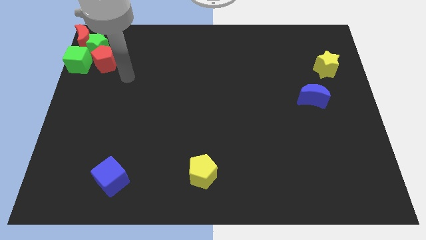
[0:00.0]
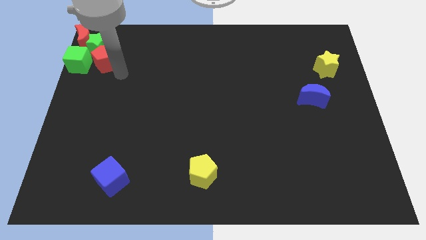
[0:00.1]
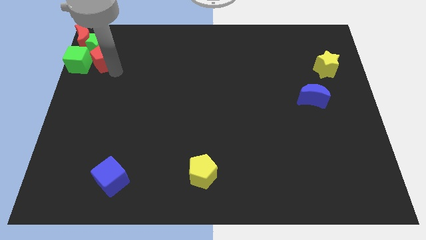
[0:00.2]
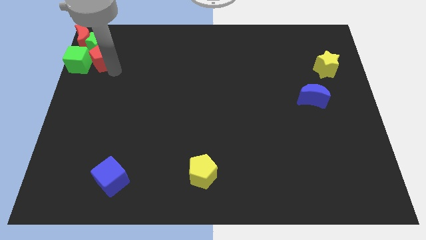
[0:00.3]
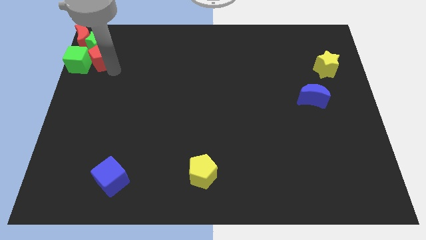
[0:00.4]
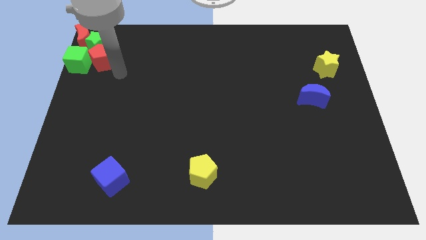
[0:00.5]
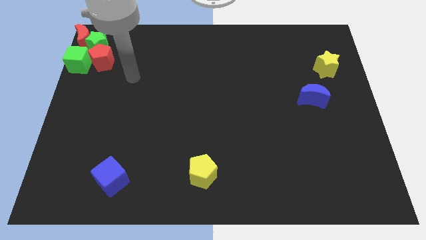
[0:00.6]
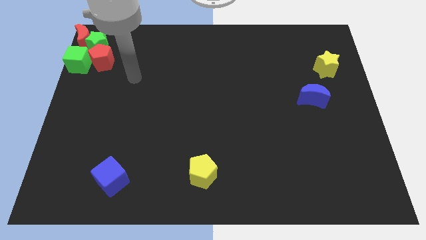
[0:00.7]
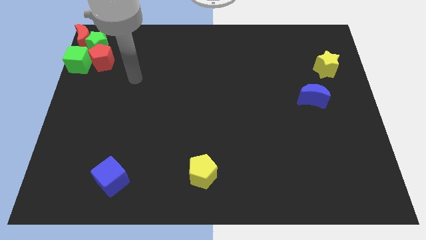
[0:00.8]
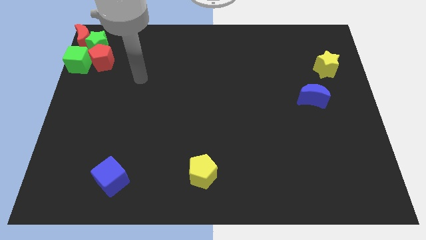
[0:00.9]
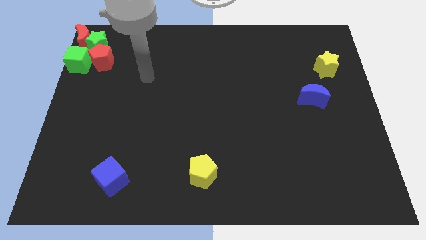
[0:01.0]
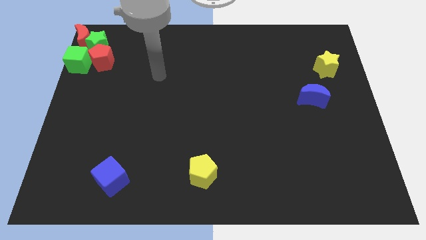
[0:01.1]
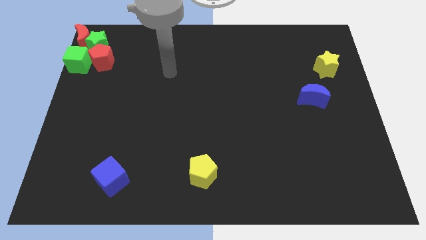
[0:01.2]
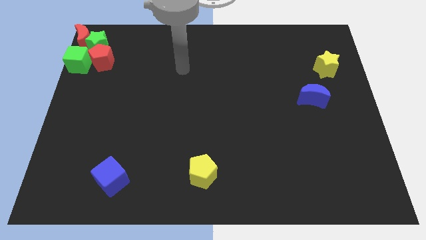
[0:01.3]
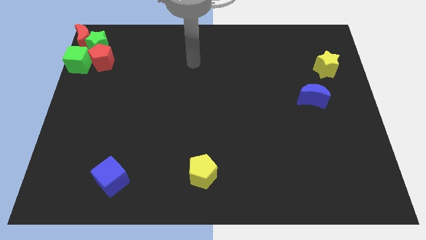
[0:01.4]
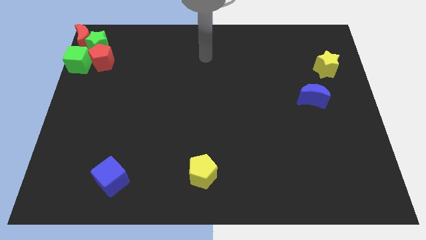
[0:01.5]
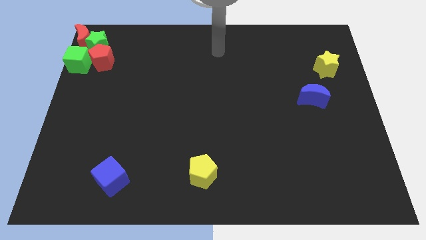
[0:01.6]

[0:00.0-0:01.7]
move the arm parallel to the top center

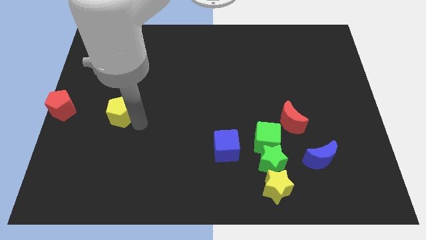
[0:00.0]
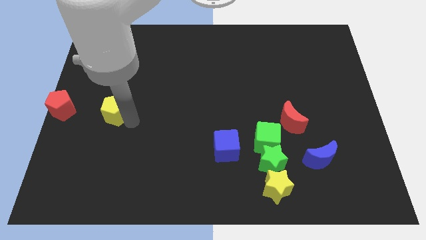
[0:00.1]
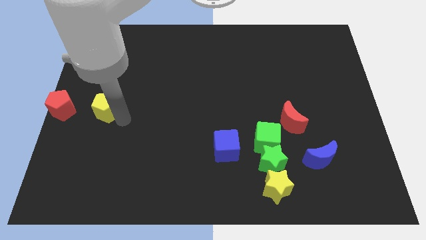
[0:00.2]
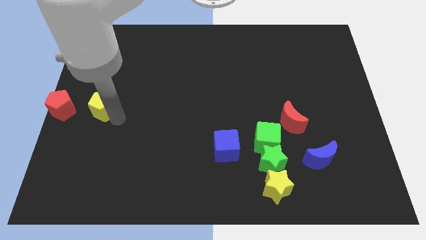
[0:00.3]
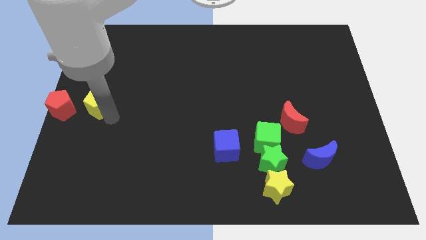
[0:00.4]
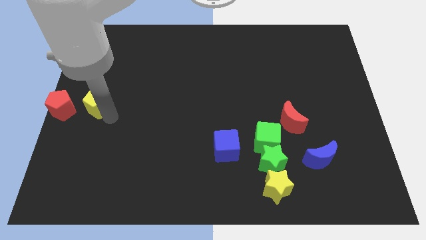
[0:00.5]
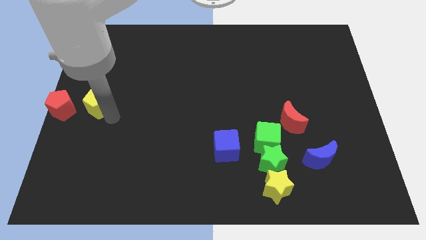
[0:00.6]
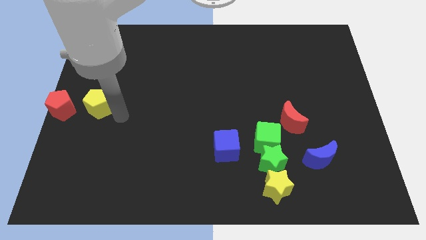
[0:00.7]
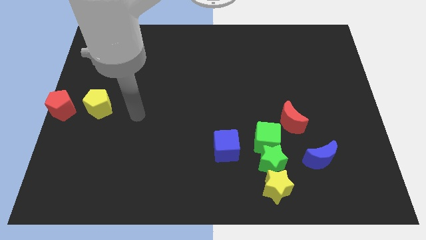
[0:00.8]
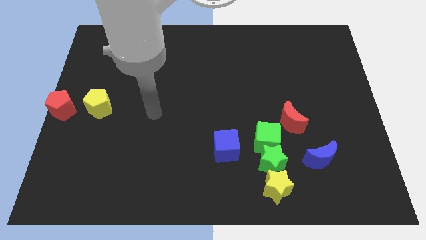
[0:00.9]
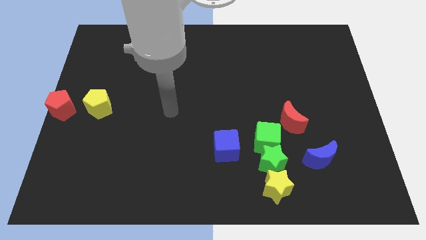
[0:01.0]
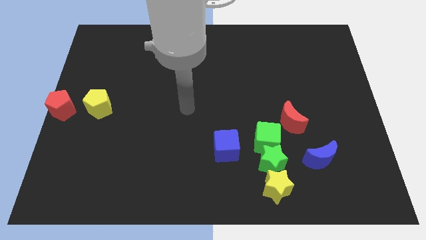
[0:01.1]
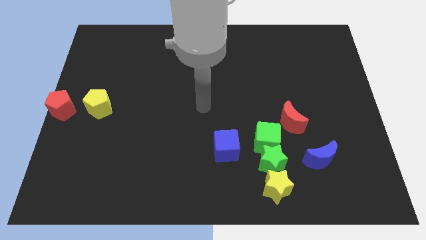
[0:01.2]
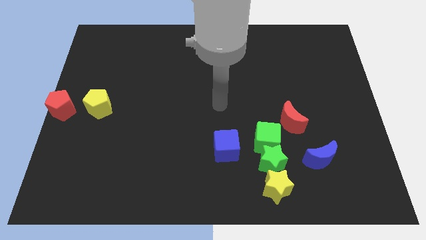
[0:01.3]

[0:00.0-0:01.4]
slide the yellow pentagon right to the red pentagon

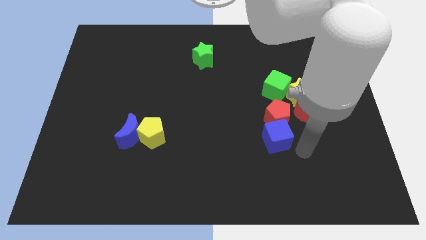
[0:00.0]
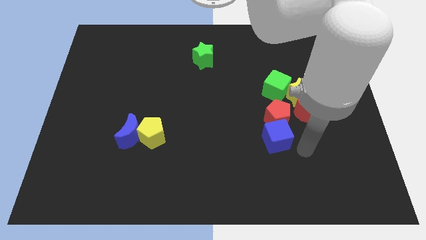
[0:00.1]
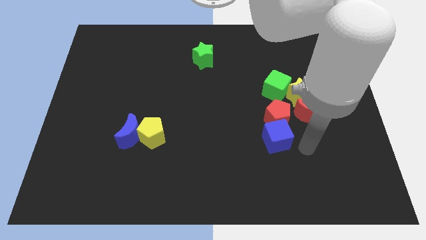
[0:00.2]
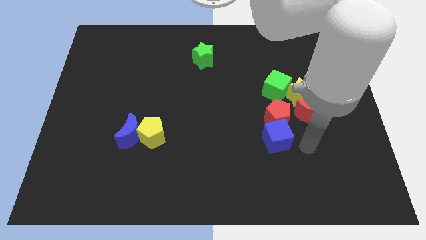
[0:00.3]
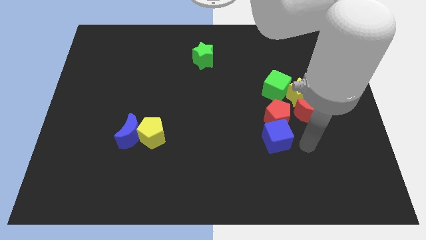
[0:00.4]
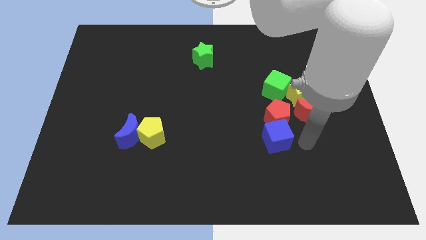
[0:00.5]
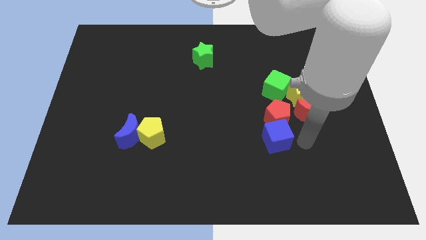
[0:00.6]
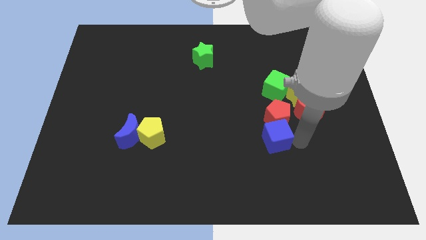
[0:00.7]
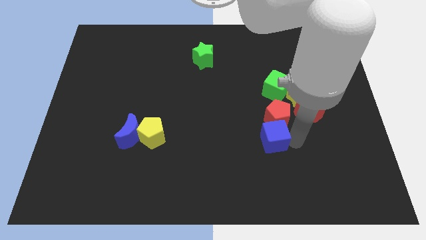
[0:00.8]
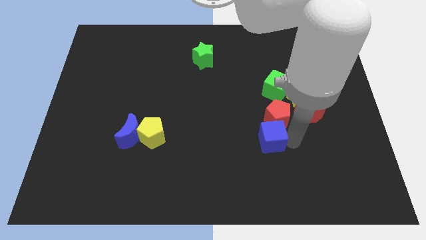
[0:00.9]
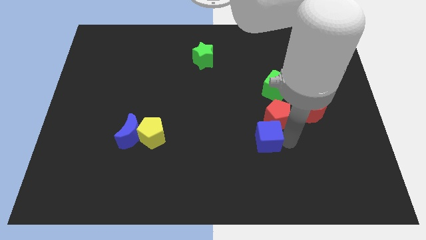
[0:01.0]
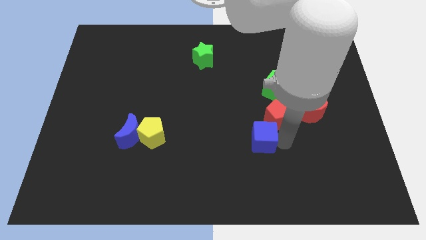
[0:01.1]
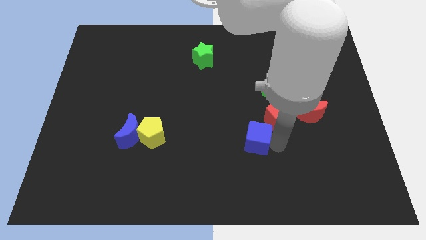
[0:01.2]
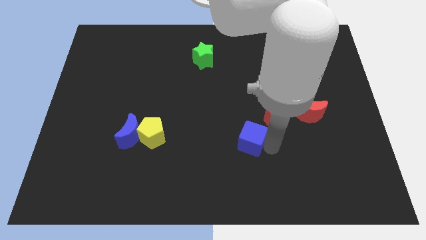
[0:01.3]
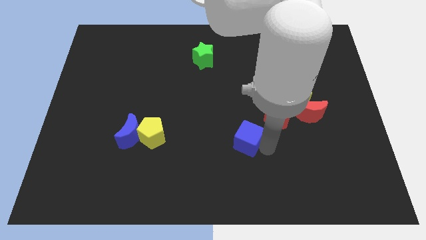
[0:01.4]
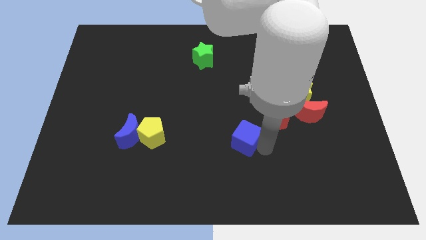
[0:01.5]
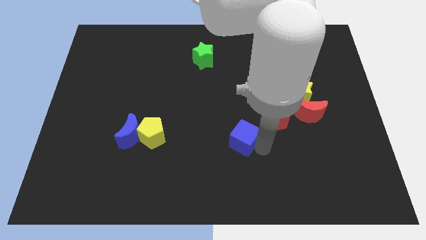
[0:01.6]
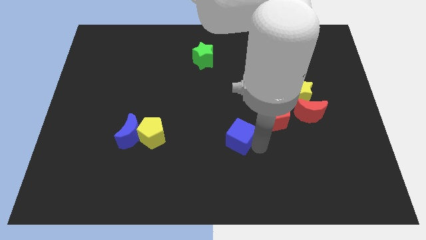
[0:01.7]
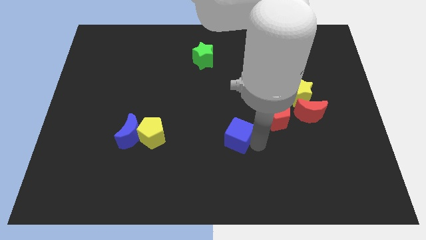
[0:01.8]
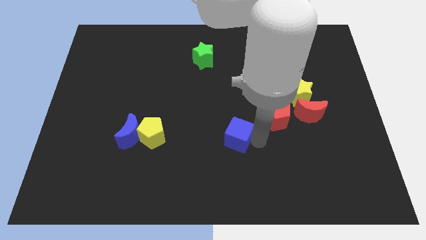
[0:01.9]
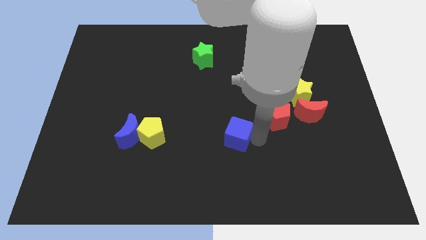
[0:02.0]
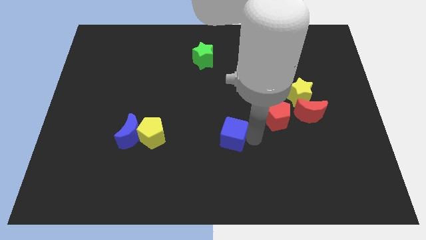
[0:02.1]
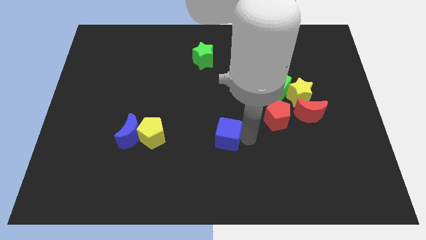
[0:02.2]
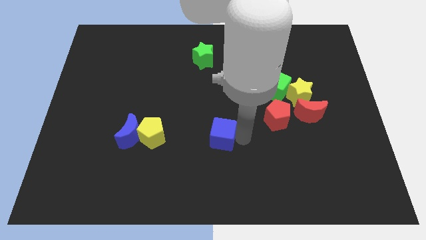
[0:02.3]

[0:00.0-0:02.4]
place the blue cube horizontally right to the yellow pentagon

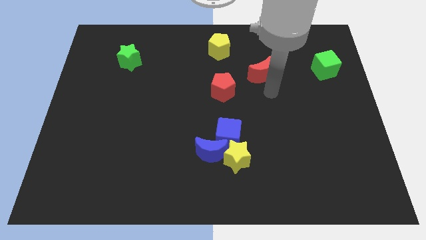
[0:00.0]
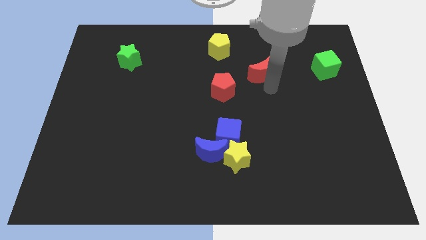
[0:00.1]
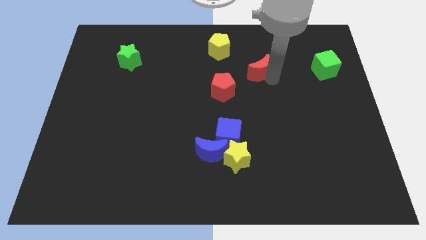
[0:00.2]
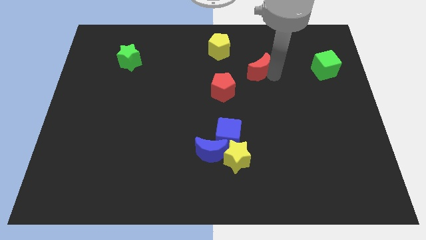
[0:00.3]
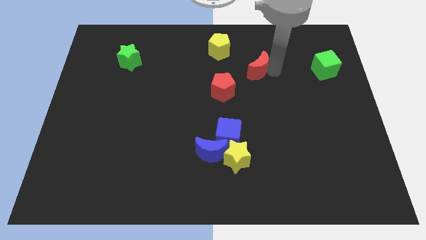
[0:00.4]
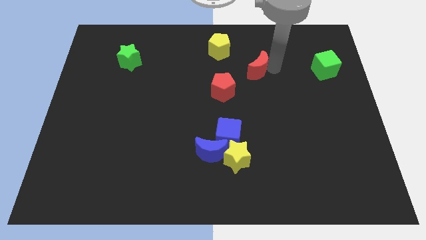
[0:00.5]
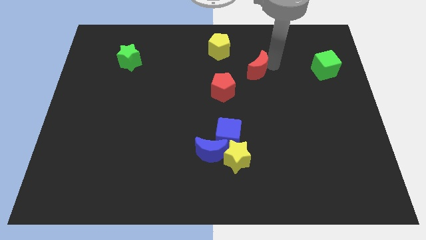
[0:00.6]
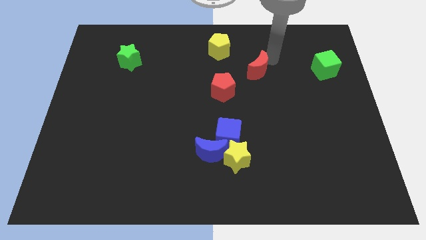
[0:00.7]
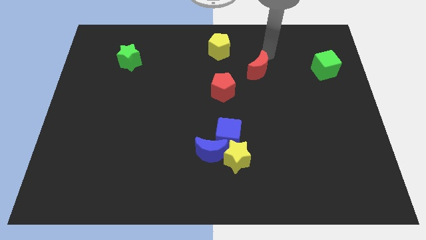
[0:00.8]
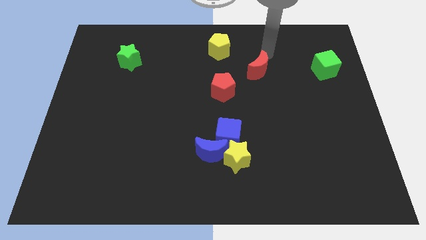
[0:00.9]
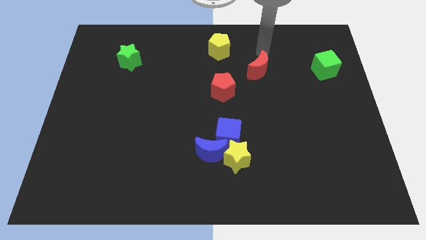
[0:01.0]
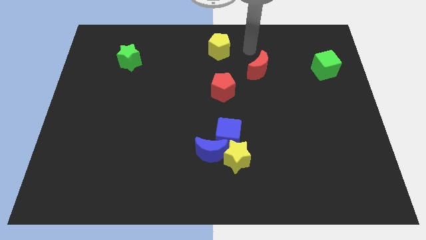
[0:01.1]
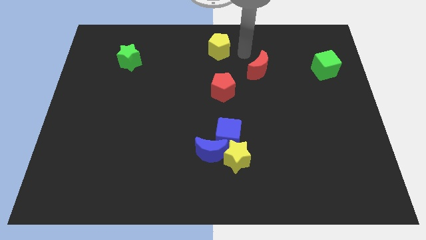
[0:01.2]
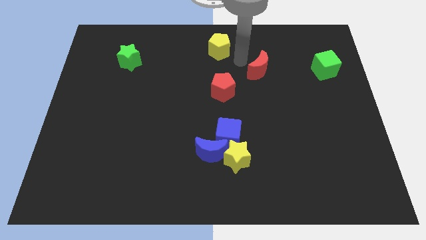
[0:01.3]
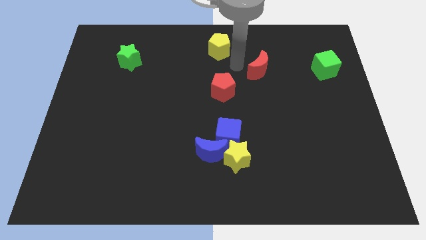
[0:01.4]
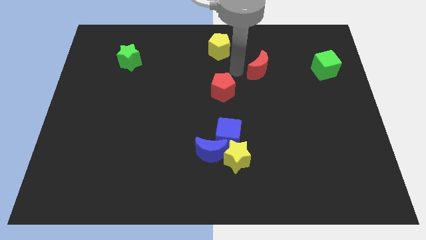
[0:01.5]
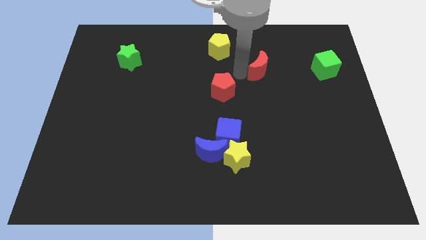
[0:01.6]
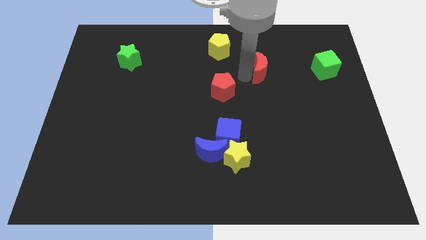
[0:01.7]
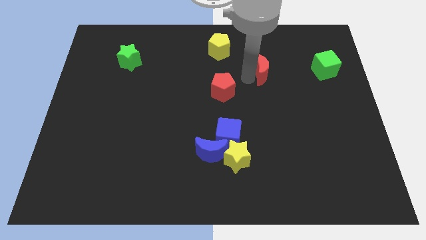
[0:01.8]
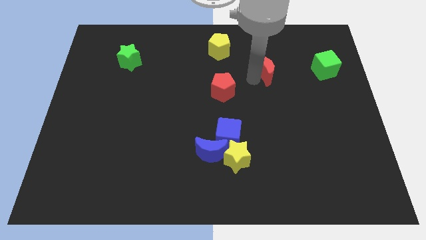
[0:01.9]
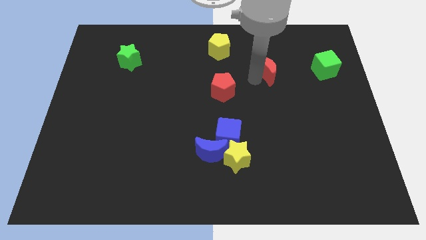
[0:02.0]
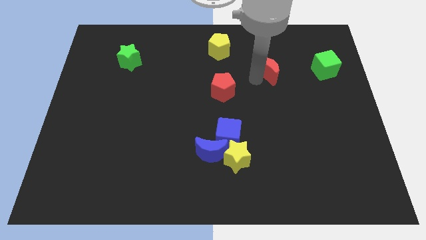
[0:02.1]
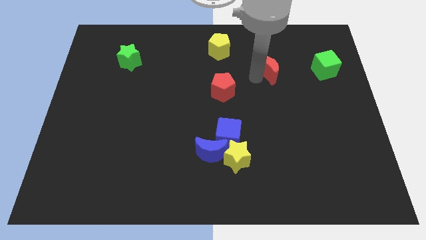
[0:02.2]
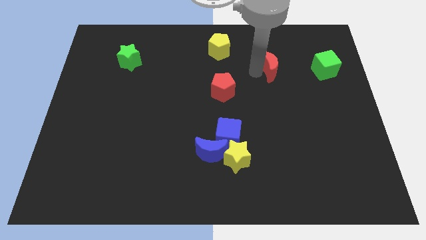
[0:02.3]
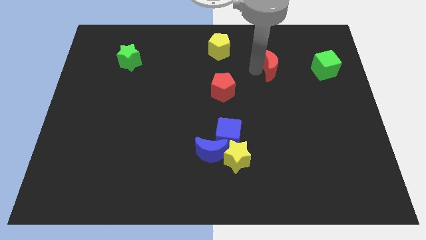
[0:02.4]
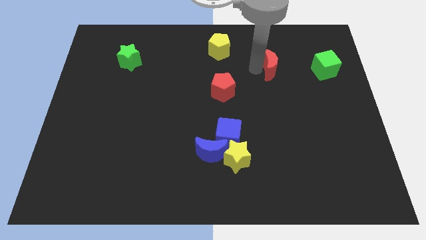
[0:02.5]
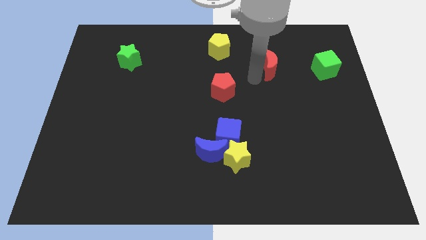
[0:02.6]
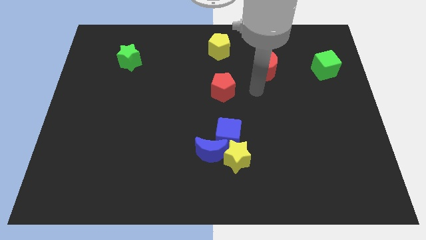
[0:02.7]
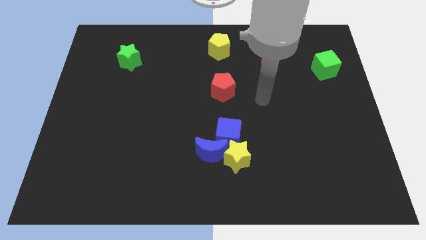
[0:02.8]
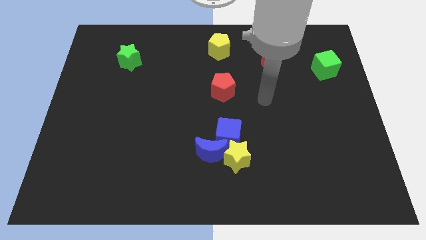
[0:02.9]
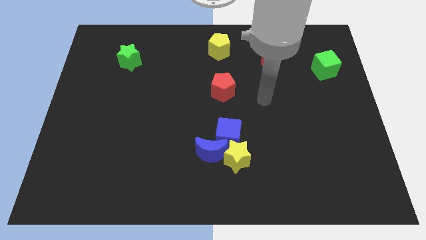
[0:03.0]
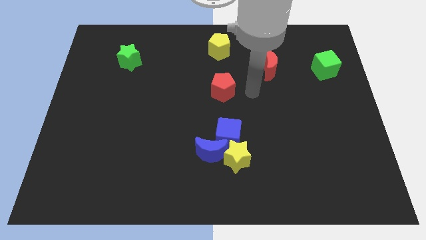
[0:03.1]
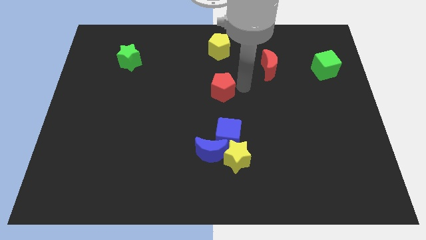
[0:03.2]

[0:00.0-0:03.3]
slightly move the red moon to the right

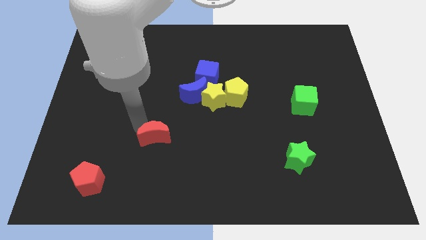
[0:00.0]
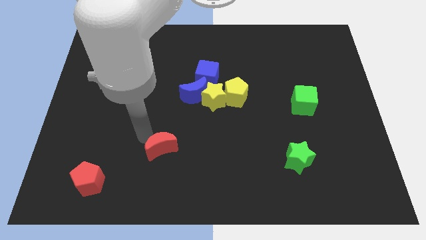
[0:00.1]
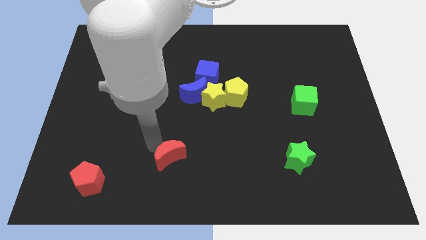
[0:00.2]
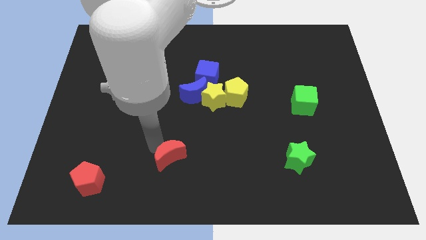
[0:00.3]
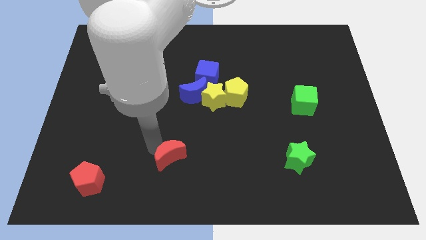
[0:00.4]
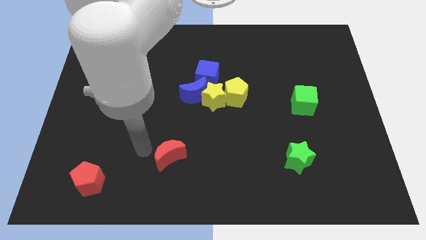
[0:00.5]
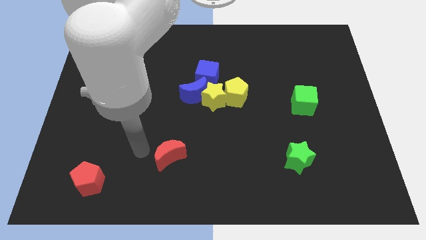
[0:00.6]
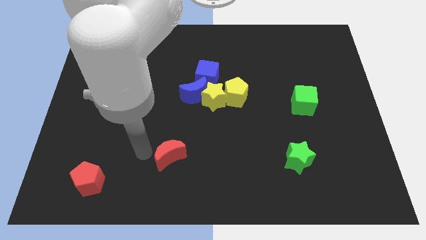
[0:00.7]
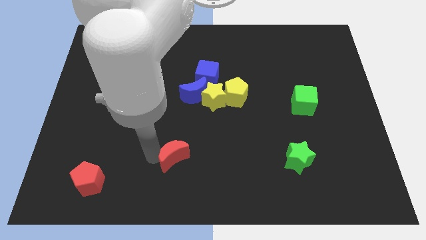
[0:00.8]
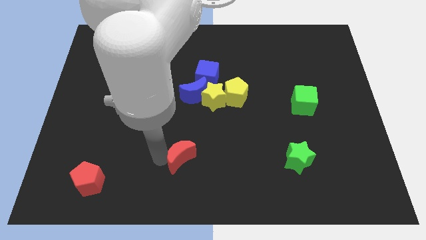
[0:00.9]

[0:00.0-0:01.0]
push red crescent below blue crescent
